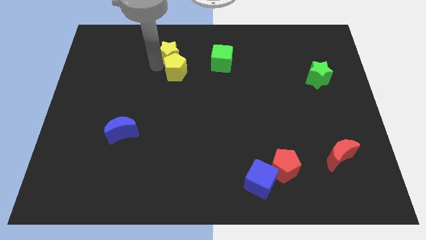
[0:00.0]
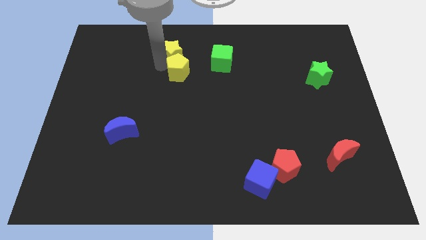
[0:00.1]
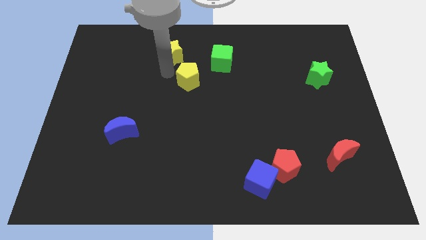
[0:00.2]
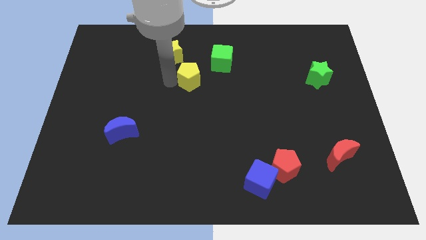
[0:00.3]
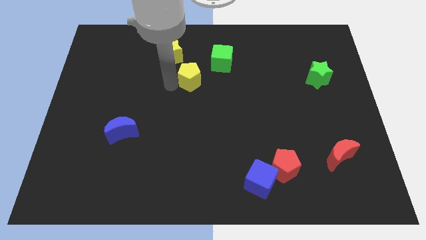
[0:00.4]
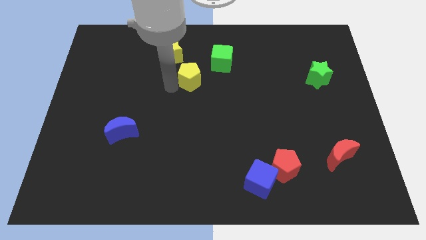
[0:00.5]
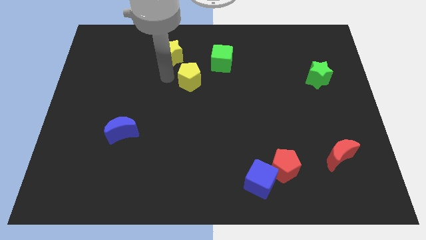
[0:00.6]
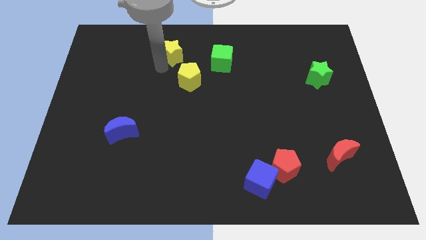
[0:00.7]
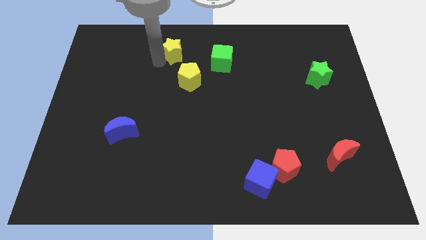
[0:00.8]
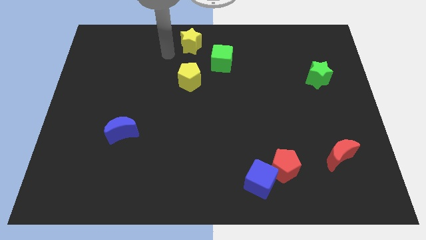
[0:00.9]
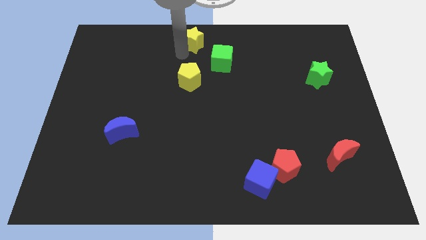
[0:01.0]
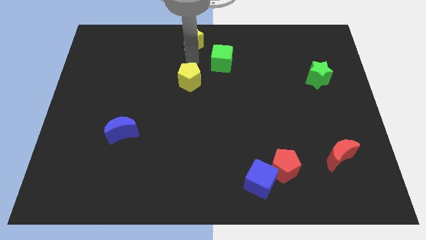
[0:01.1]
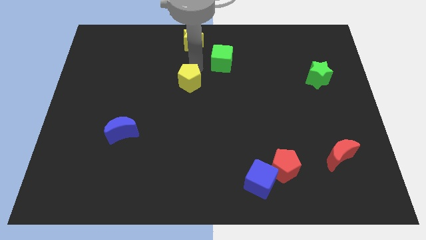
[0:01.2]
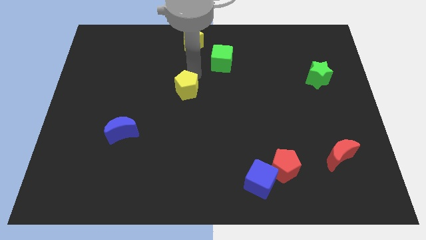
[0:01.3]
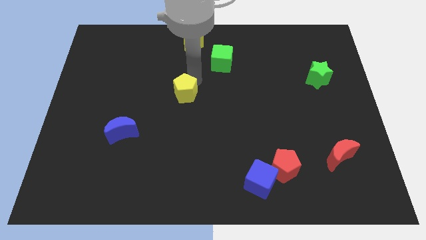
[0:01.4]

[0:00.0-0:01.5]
separate yellow pentagon and the yellow star

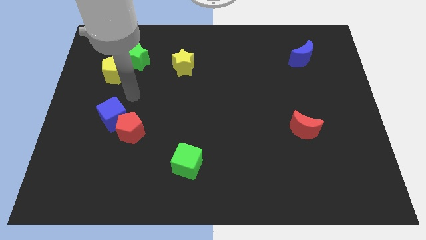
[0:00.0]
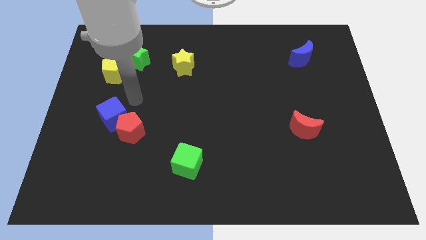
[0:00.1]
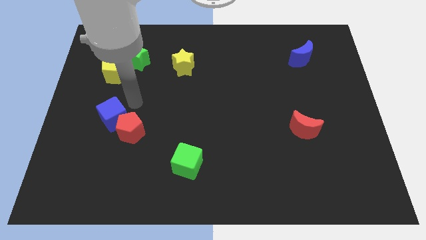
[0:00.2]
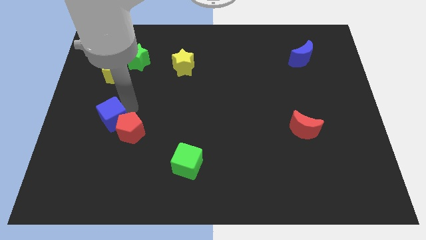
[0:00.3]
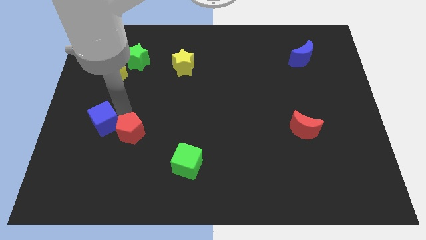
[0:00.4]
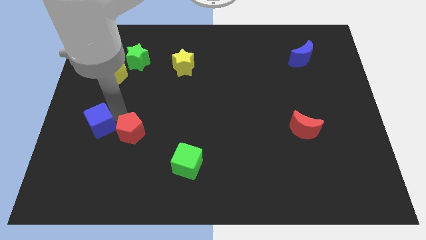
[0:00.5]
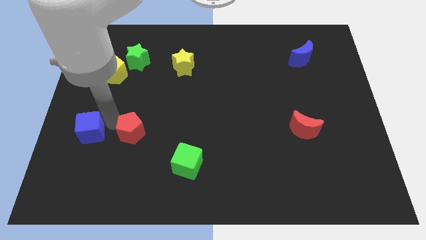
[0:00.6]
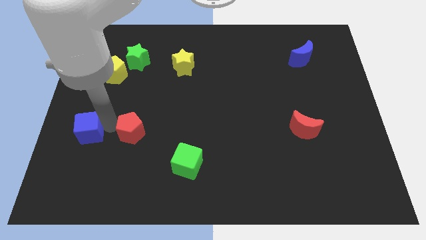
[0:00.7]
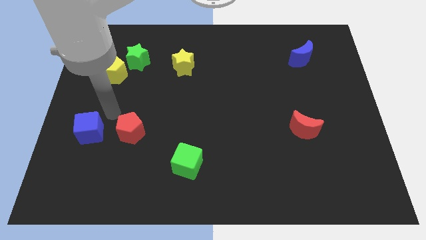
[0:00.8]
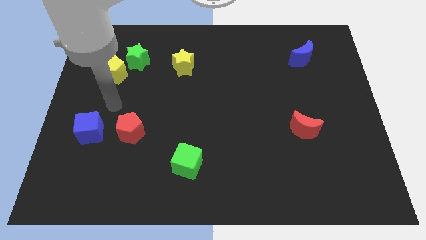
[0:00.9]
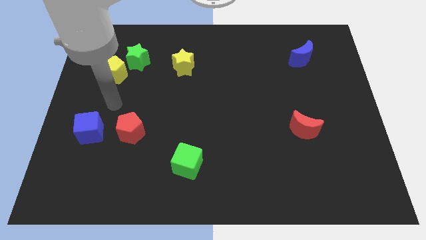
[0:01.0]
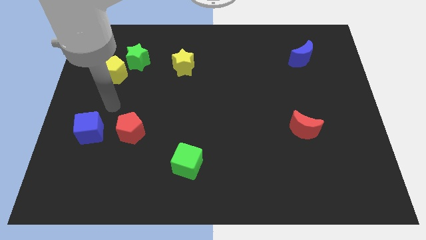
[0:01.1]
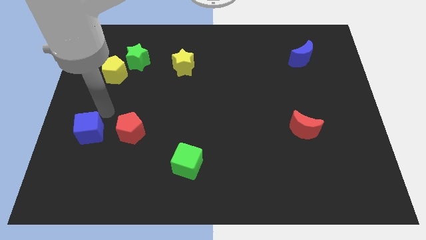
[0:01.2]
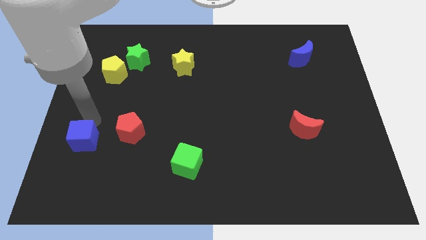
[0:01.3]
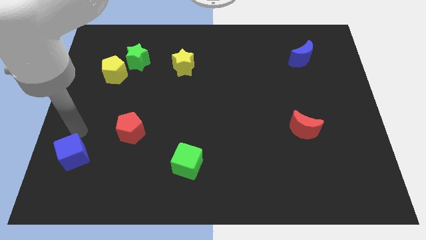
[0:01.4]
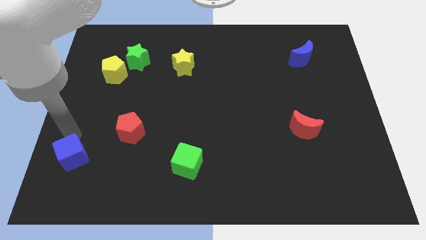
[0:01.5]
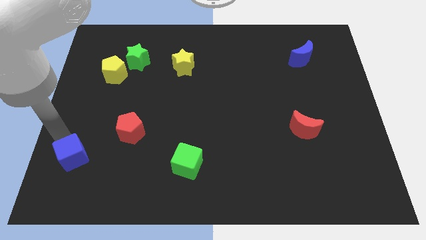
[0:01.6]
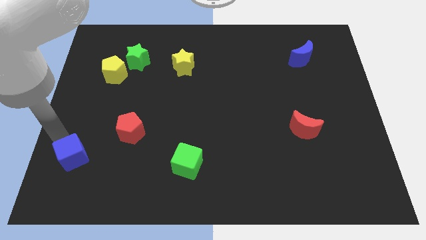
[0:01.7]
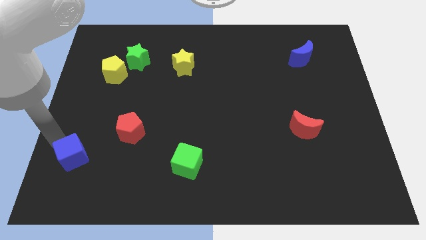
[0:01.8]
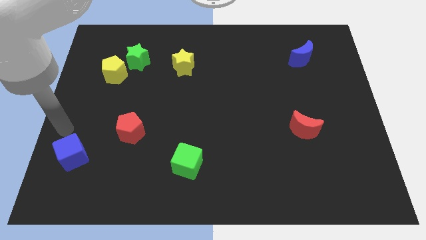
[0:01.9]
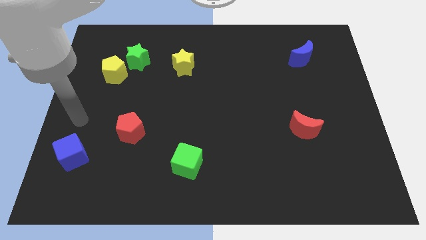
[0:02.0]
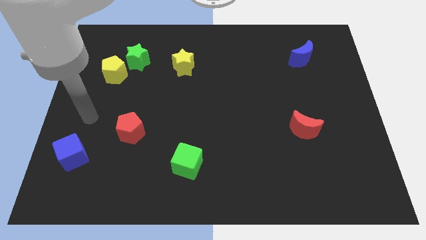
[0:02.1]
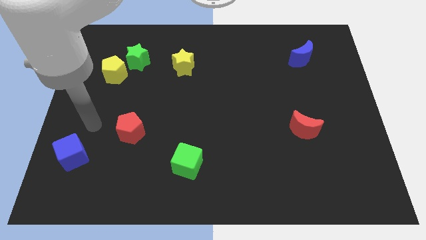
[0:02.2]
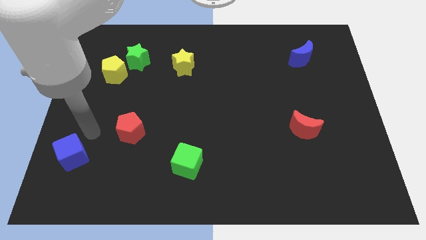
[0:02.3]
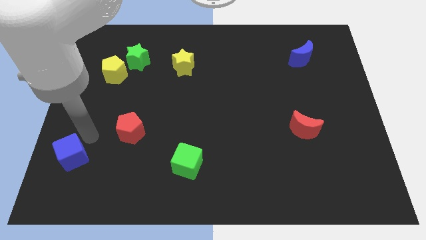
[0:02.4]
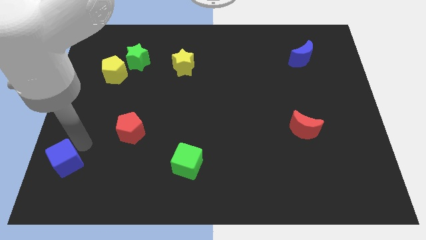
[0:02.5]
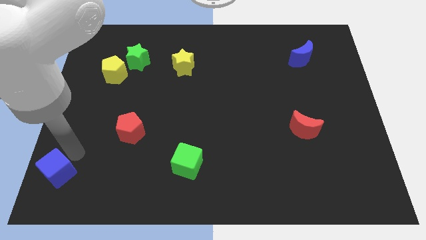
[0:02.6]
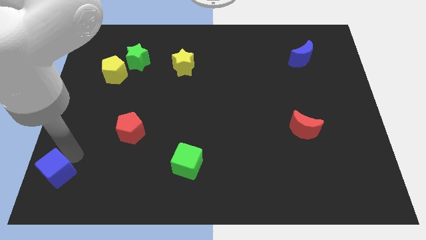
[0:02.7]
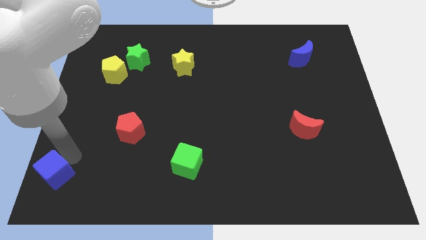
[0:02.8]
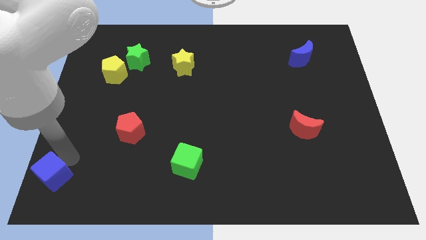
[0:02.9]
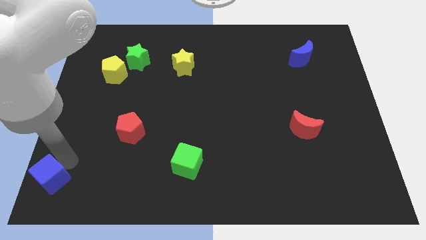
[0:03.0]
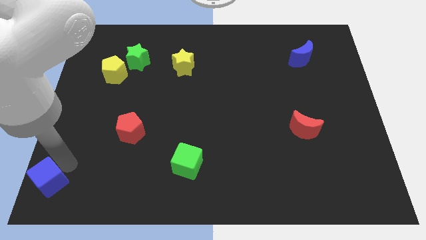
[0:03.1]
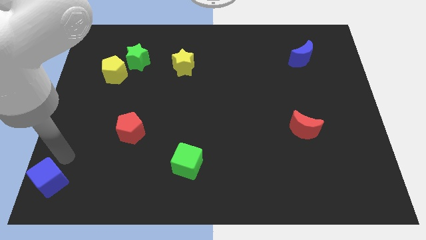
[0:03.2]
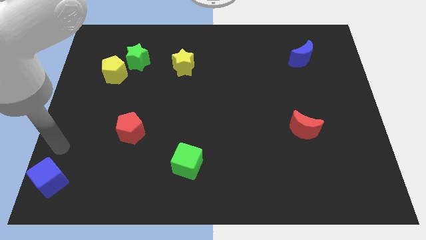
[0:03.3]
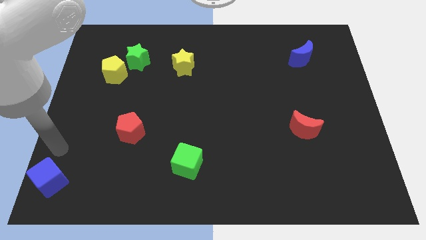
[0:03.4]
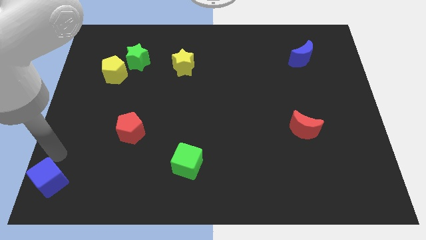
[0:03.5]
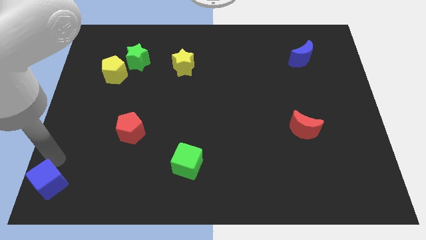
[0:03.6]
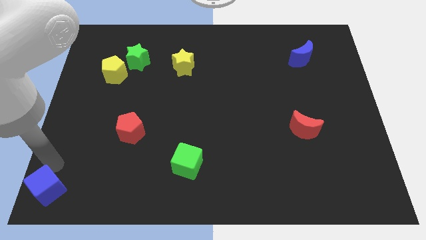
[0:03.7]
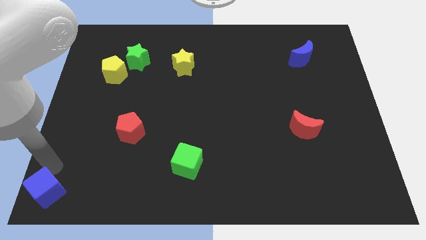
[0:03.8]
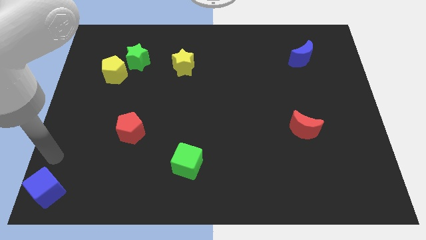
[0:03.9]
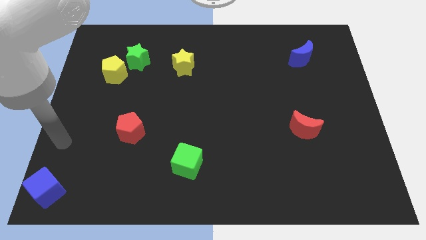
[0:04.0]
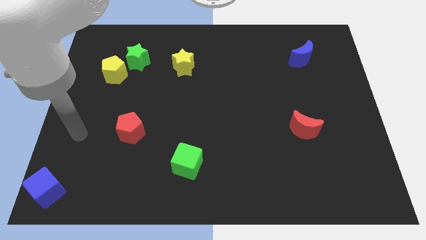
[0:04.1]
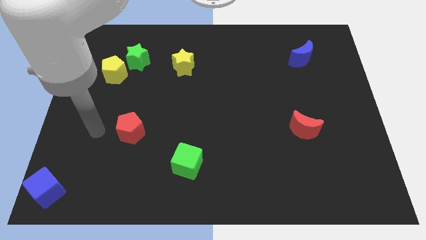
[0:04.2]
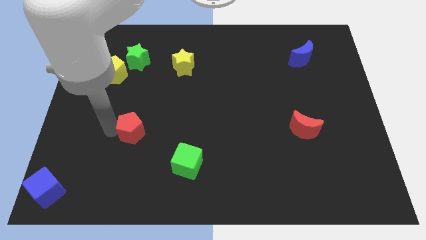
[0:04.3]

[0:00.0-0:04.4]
push the blue cube to the bottom left corner of the board

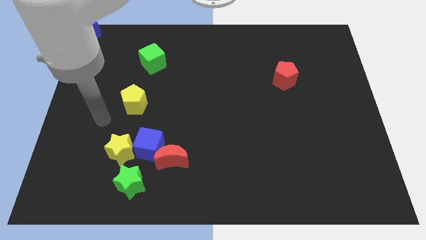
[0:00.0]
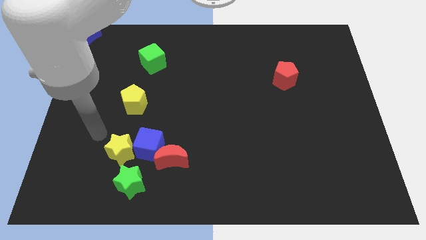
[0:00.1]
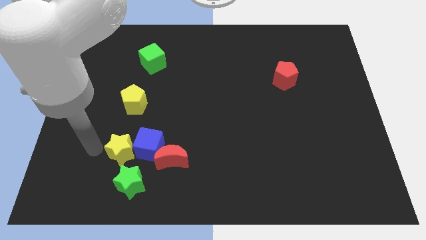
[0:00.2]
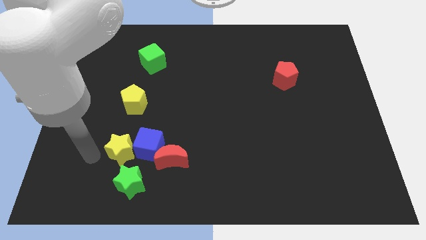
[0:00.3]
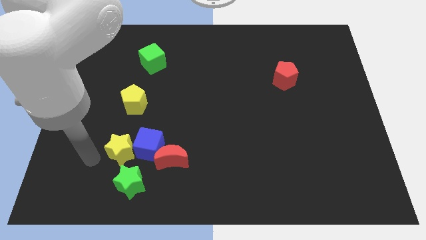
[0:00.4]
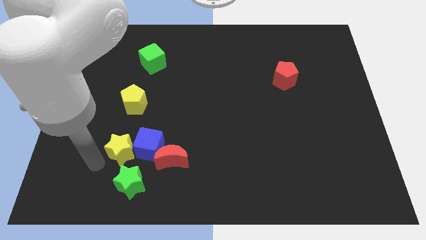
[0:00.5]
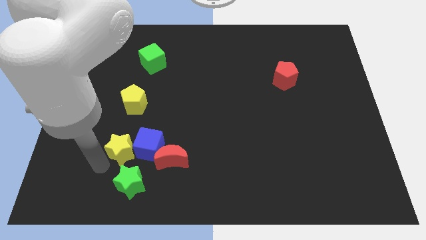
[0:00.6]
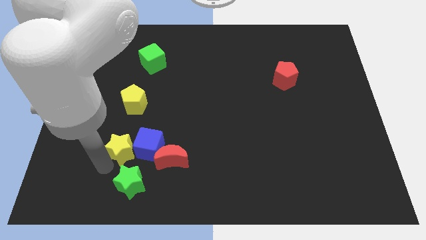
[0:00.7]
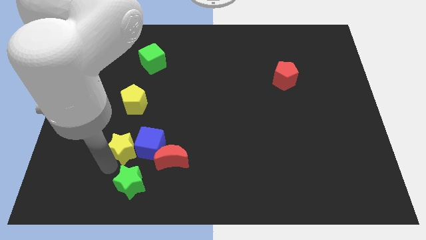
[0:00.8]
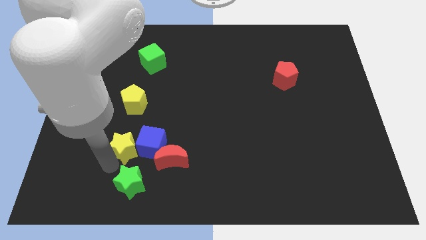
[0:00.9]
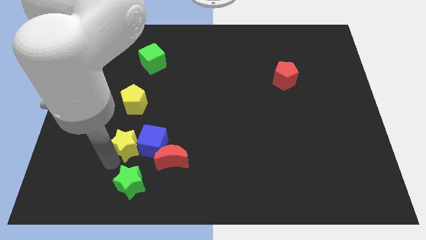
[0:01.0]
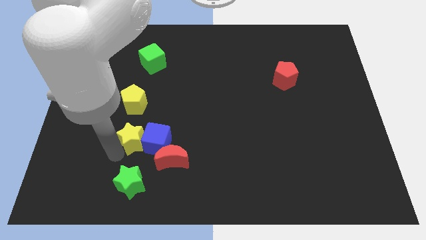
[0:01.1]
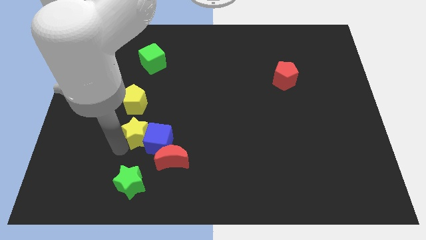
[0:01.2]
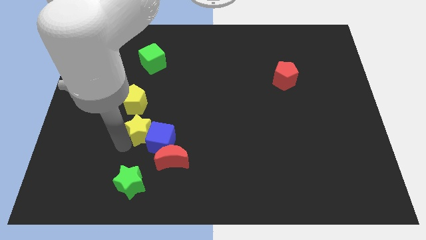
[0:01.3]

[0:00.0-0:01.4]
move your arm to the left of the yellow star

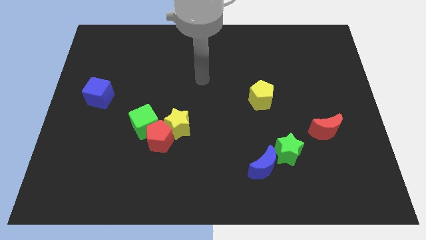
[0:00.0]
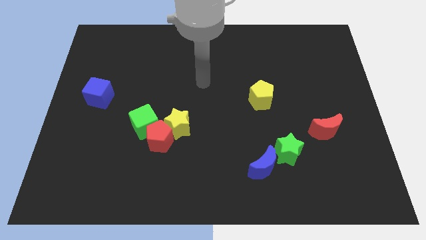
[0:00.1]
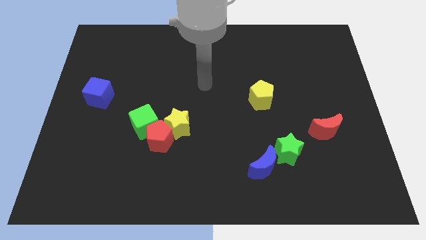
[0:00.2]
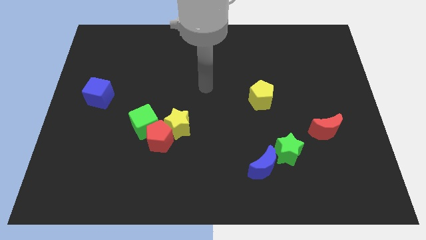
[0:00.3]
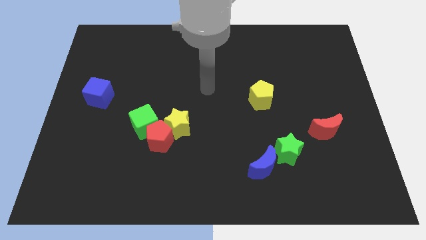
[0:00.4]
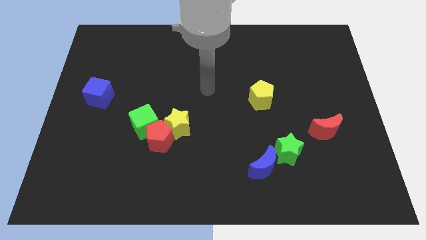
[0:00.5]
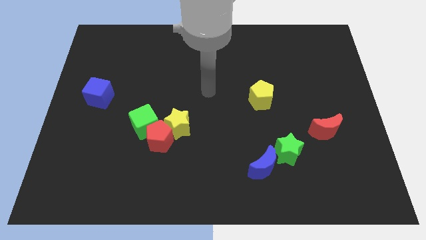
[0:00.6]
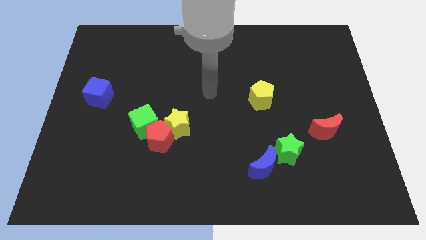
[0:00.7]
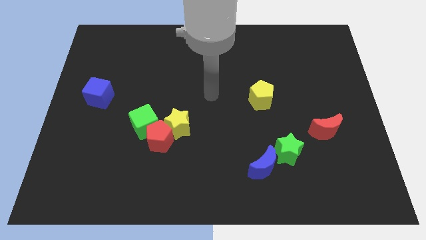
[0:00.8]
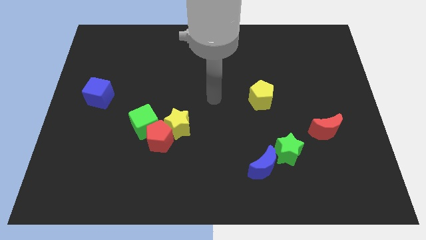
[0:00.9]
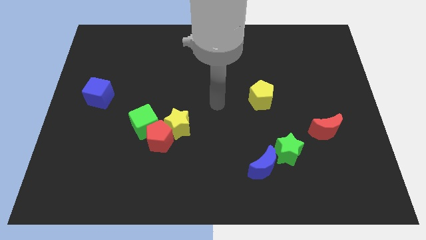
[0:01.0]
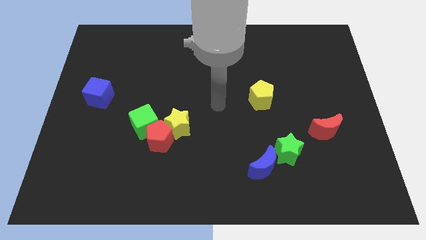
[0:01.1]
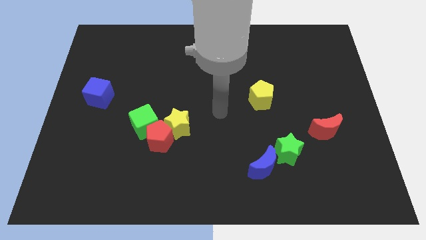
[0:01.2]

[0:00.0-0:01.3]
put your hand between the yellow blocks

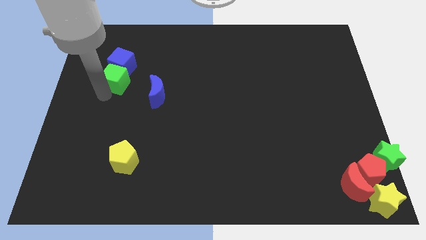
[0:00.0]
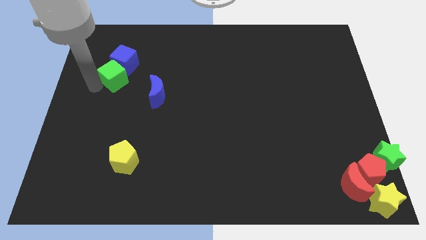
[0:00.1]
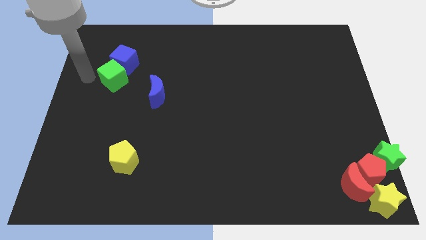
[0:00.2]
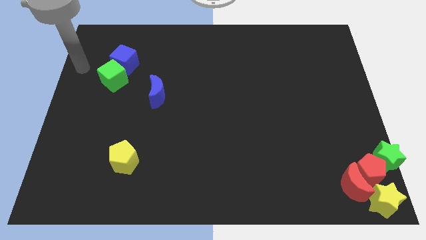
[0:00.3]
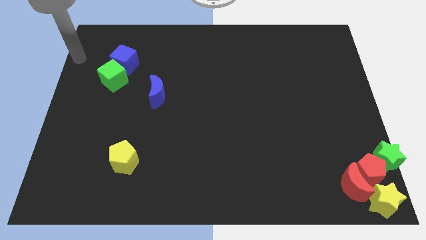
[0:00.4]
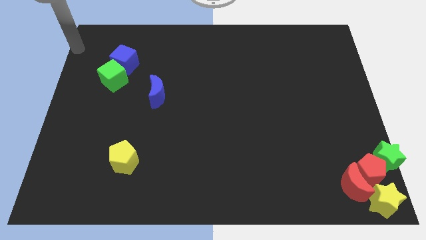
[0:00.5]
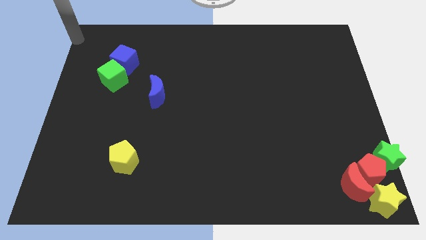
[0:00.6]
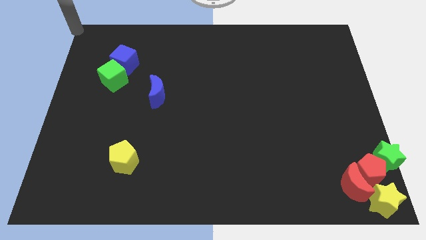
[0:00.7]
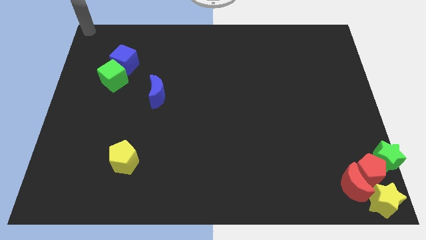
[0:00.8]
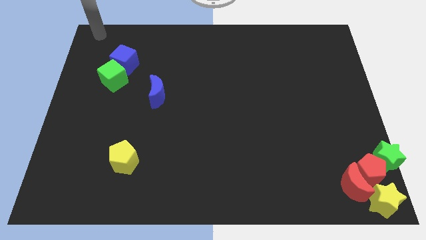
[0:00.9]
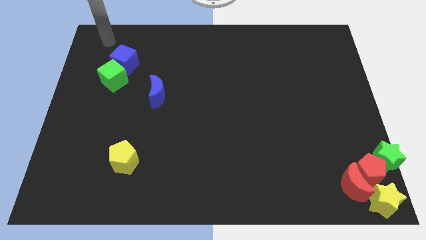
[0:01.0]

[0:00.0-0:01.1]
move green cube and blue cube slightly towards top
